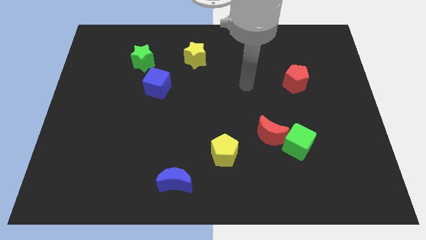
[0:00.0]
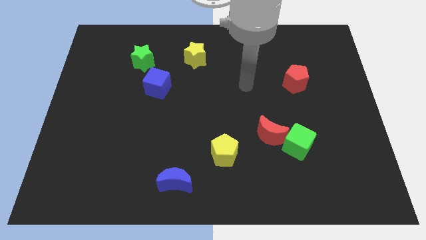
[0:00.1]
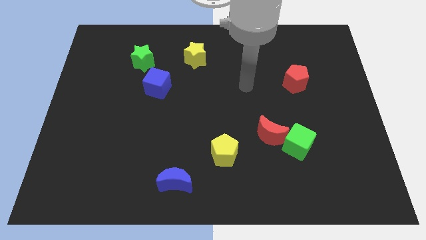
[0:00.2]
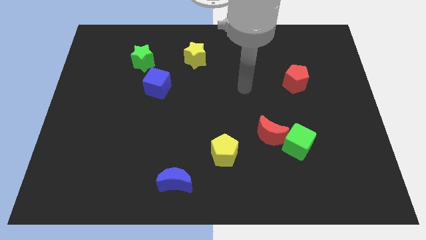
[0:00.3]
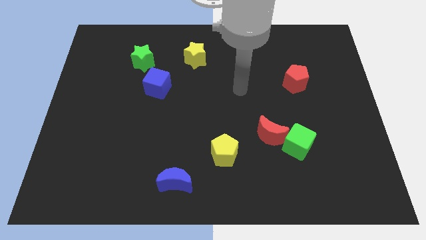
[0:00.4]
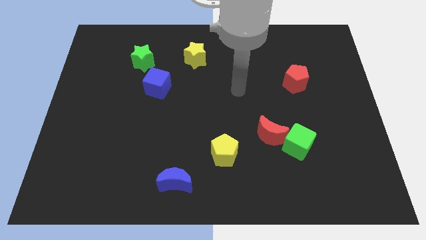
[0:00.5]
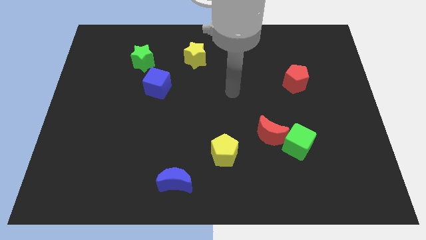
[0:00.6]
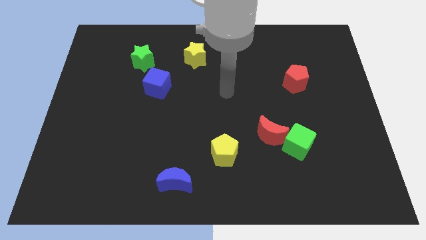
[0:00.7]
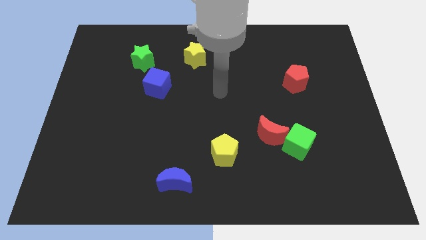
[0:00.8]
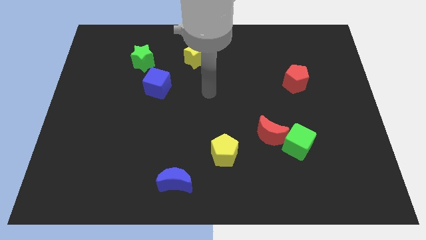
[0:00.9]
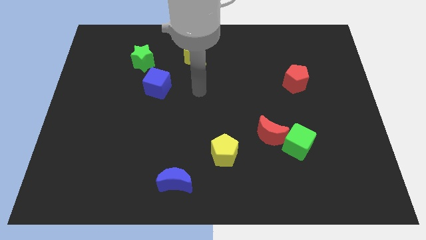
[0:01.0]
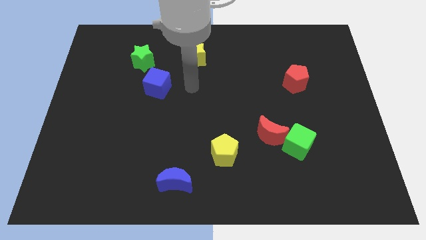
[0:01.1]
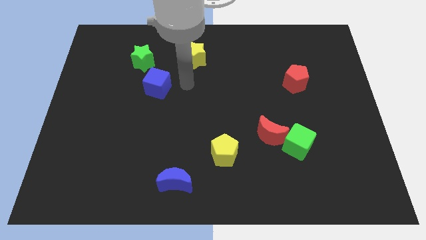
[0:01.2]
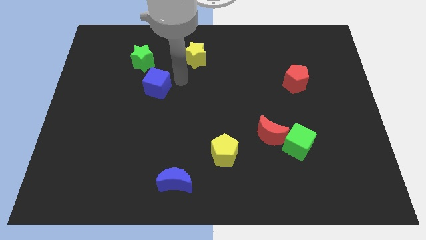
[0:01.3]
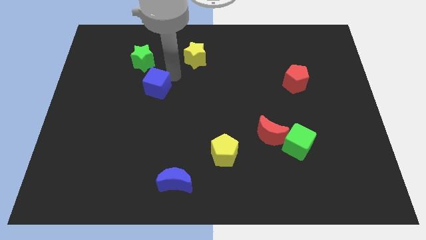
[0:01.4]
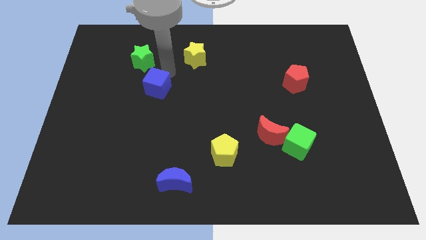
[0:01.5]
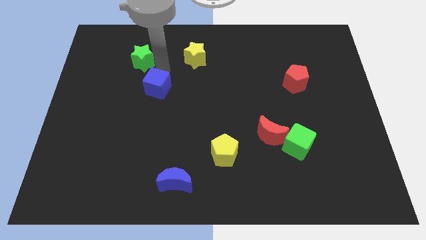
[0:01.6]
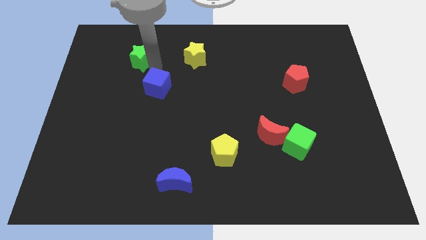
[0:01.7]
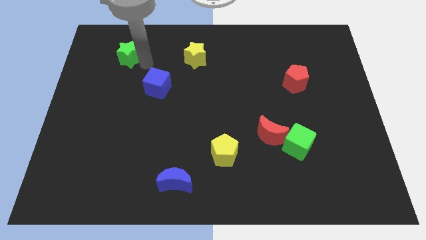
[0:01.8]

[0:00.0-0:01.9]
slightly push the green star to left

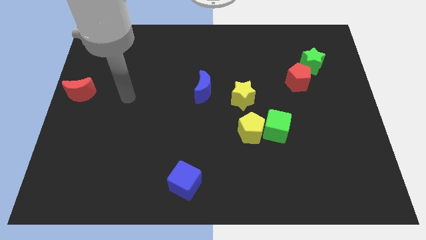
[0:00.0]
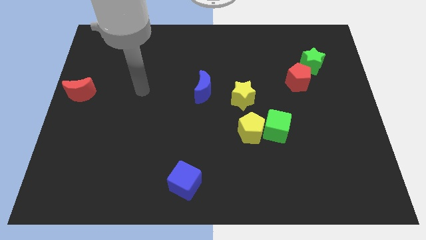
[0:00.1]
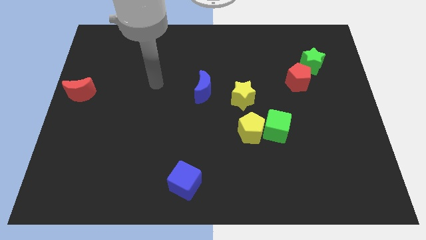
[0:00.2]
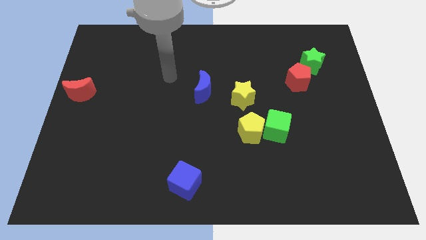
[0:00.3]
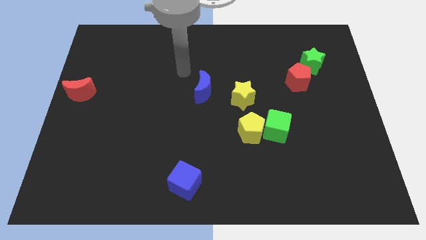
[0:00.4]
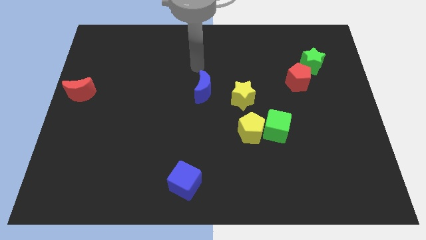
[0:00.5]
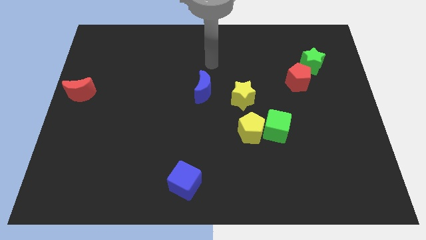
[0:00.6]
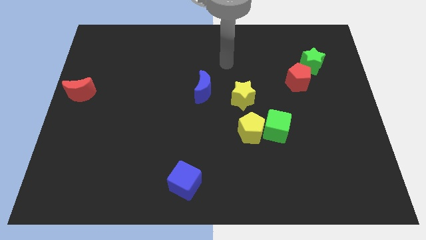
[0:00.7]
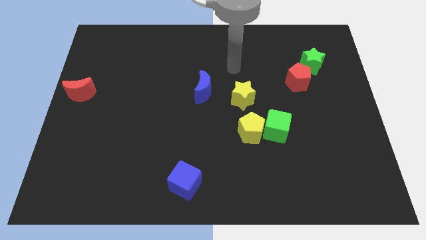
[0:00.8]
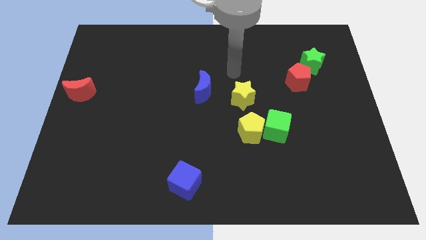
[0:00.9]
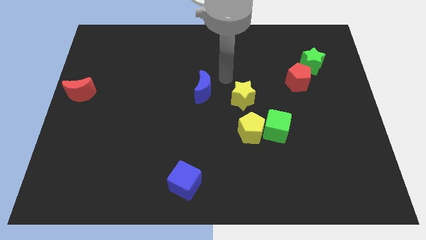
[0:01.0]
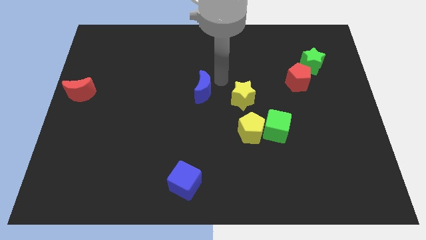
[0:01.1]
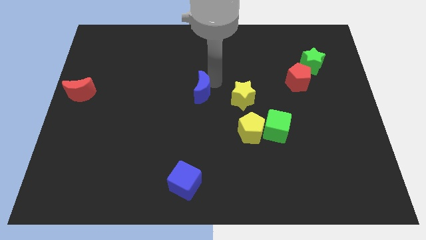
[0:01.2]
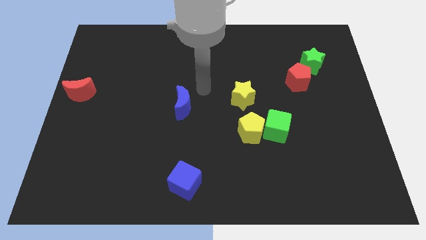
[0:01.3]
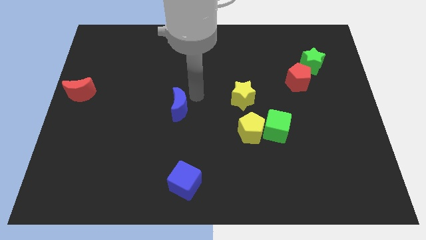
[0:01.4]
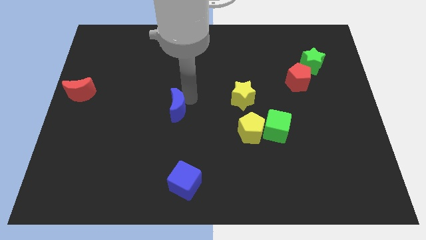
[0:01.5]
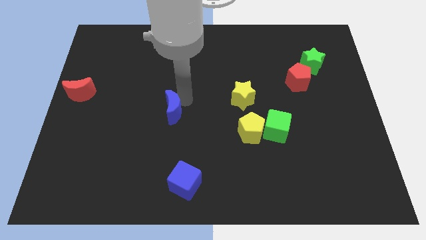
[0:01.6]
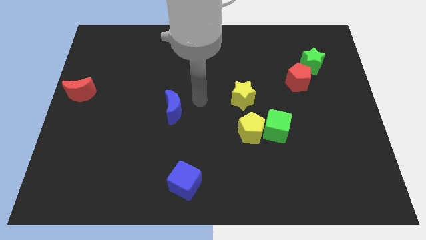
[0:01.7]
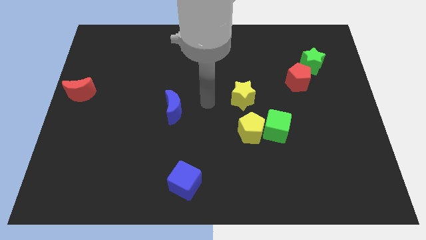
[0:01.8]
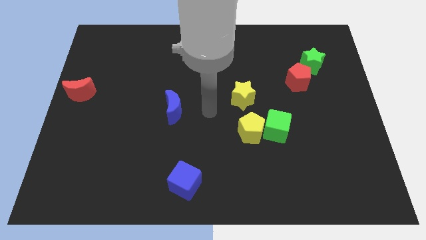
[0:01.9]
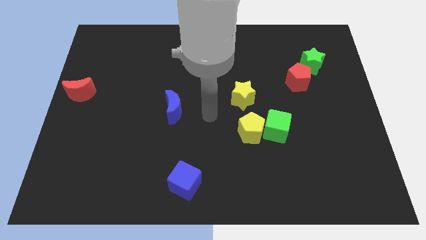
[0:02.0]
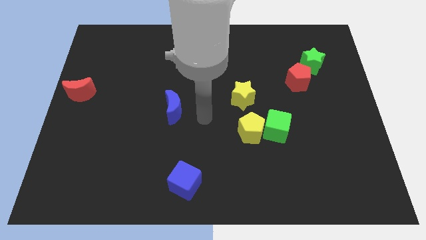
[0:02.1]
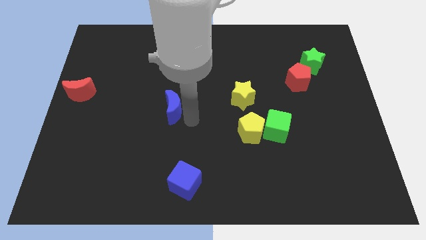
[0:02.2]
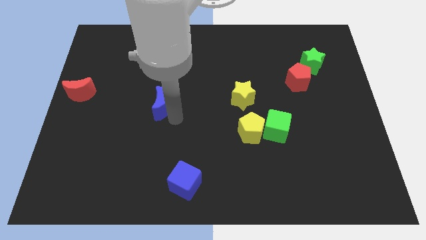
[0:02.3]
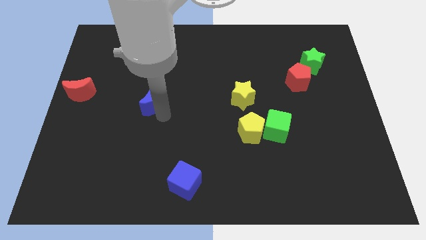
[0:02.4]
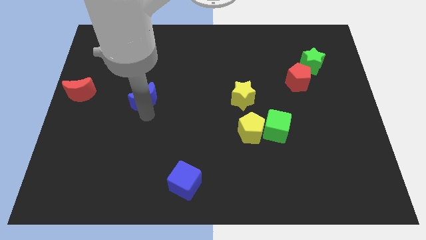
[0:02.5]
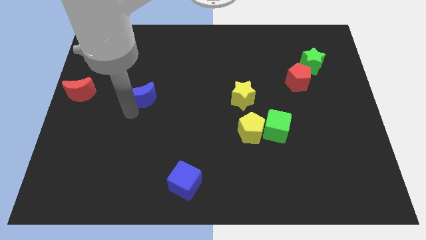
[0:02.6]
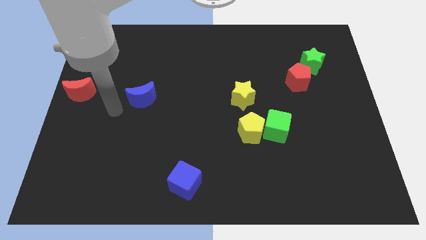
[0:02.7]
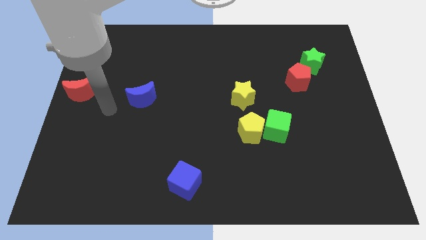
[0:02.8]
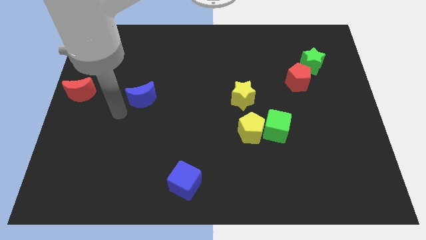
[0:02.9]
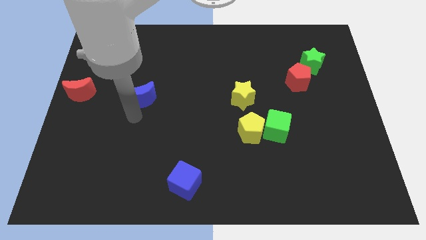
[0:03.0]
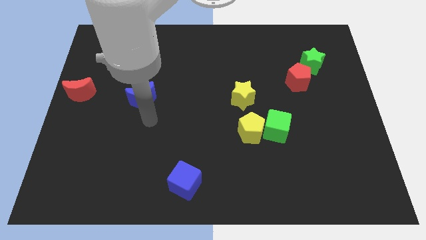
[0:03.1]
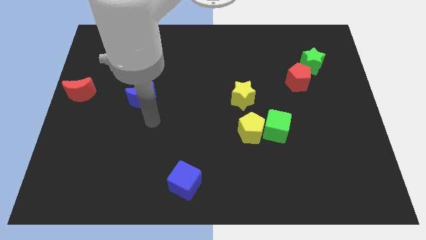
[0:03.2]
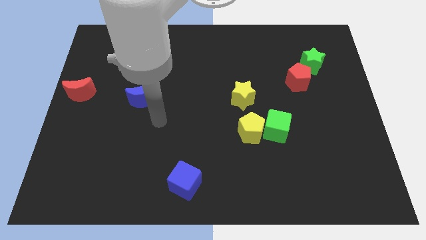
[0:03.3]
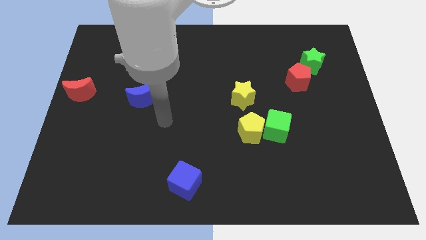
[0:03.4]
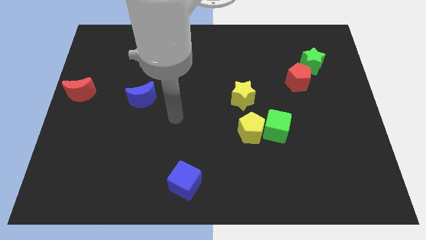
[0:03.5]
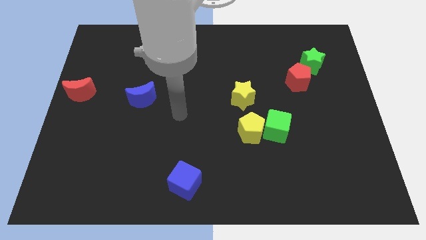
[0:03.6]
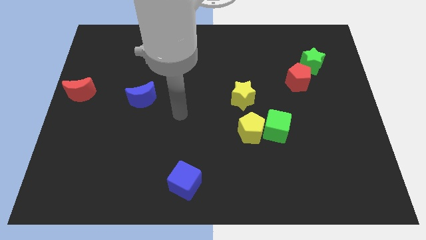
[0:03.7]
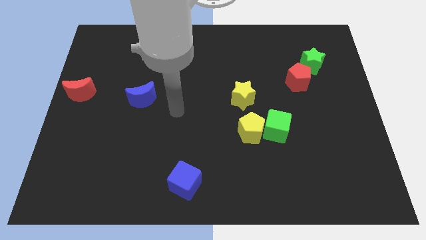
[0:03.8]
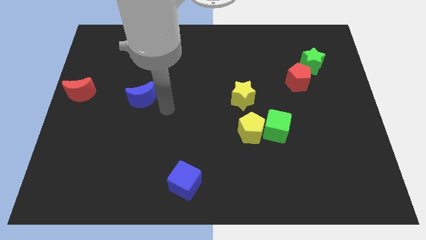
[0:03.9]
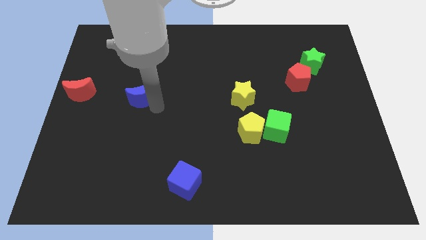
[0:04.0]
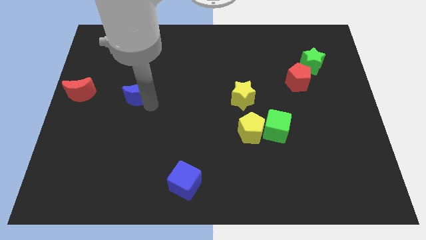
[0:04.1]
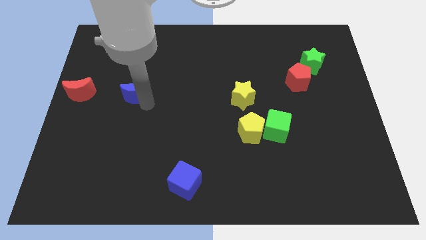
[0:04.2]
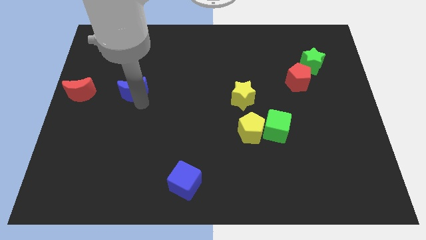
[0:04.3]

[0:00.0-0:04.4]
slide the blue moon close to the red moon

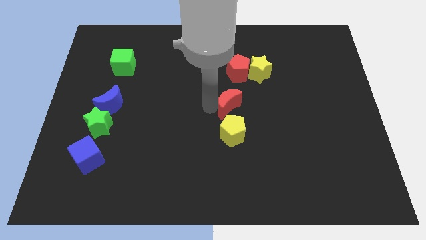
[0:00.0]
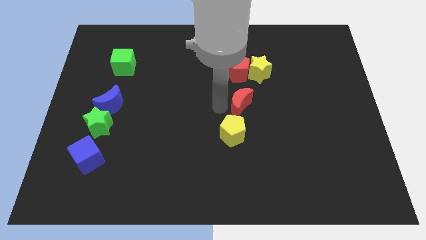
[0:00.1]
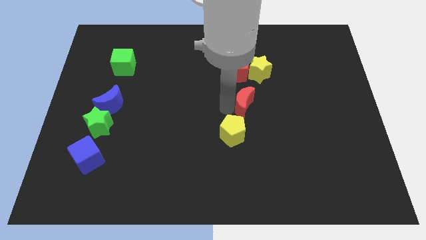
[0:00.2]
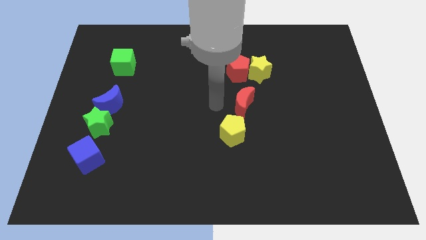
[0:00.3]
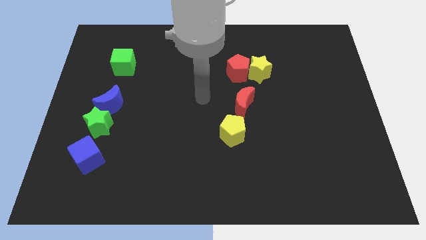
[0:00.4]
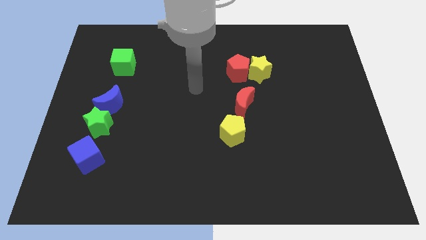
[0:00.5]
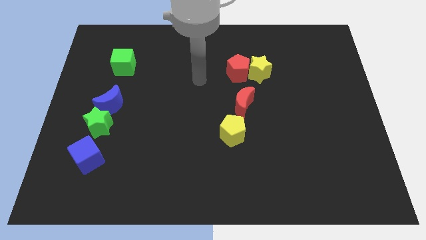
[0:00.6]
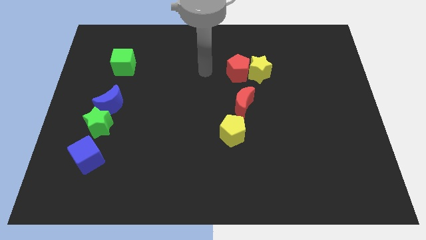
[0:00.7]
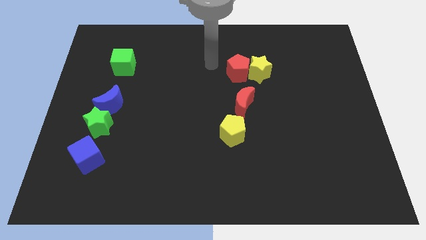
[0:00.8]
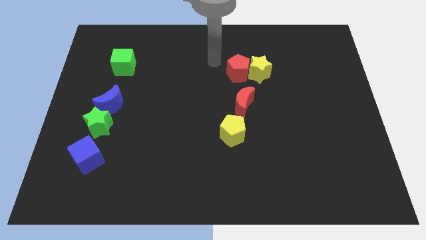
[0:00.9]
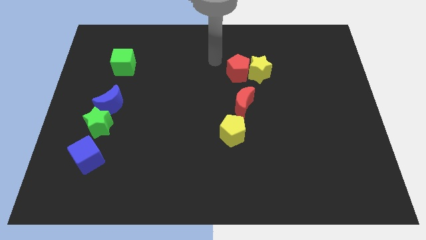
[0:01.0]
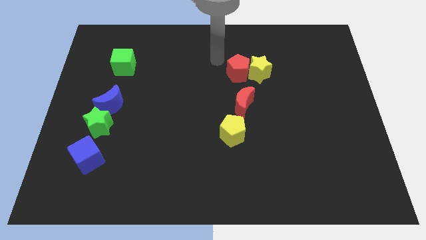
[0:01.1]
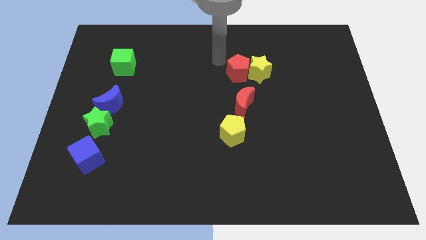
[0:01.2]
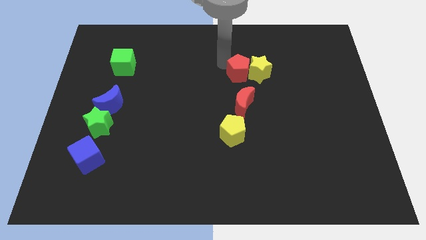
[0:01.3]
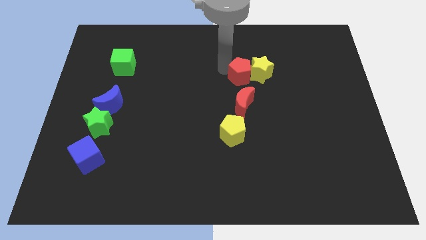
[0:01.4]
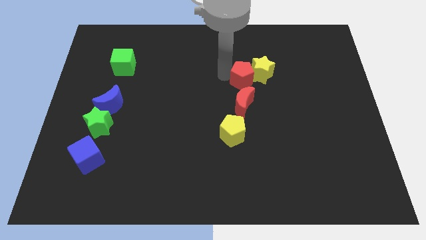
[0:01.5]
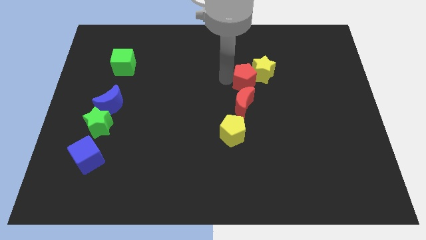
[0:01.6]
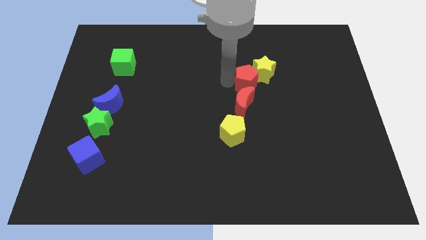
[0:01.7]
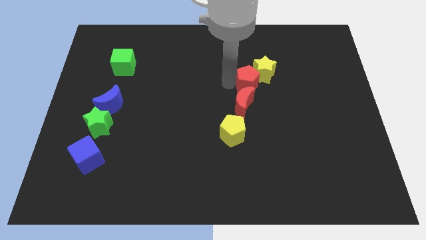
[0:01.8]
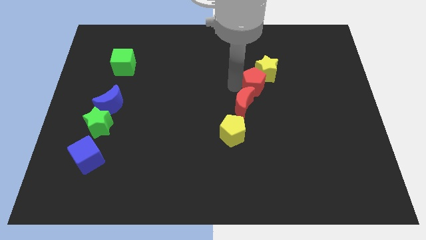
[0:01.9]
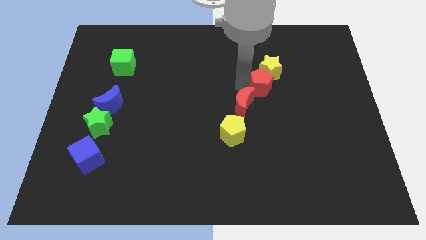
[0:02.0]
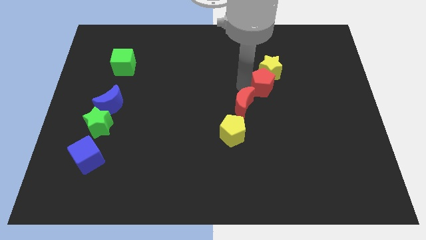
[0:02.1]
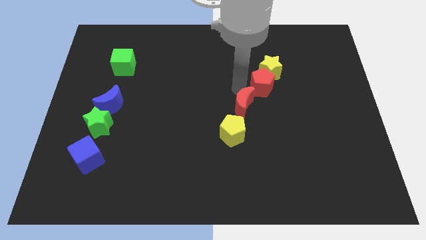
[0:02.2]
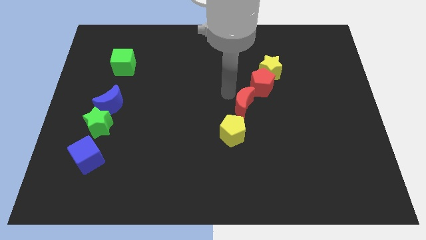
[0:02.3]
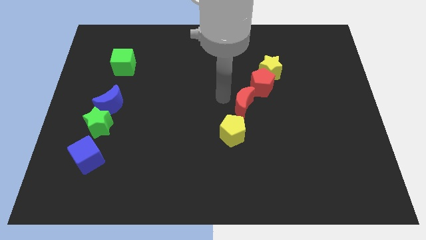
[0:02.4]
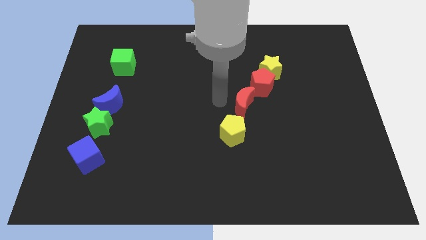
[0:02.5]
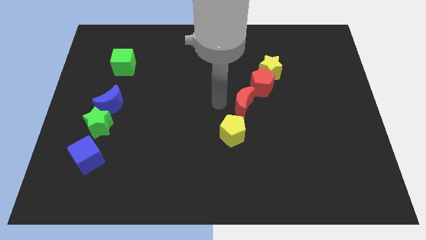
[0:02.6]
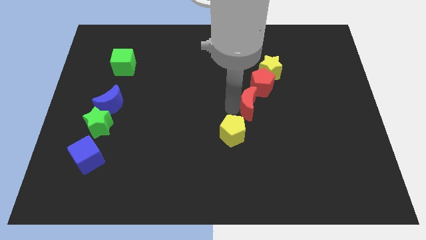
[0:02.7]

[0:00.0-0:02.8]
place red pentagon at the top of red crescent
